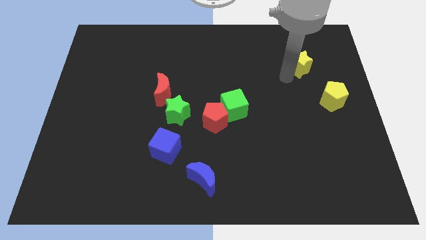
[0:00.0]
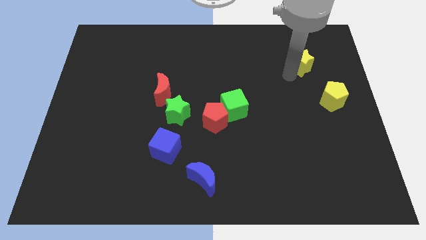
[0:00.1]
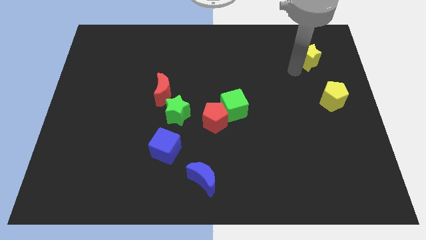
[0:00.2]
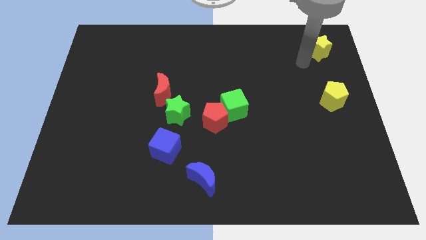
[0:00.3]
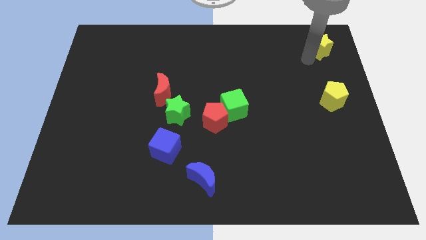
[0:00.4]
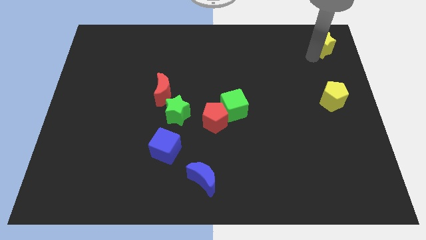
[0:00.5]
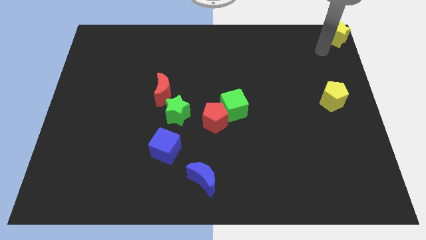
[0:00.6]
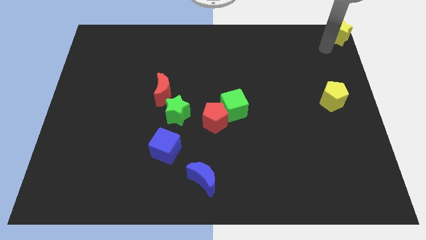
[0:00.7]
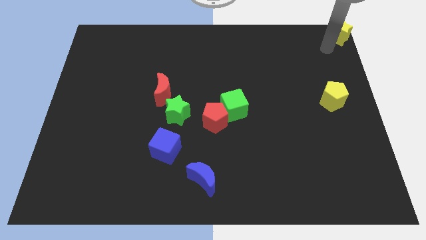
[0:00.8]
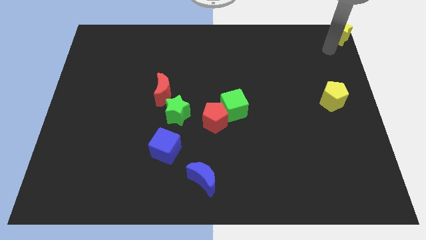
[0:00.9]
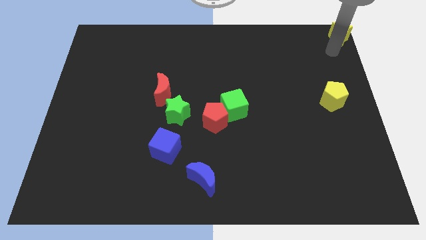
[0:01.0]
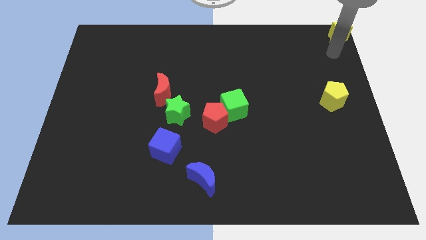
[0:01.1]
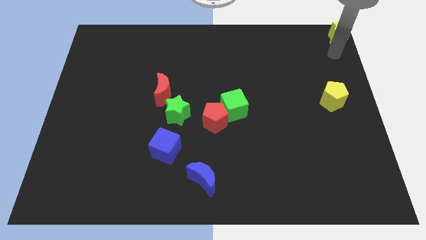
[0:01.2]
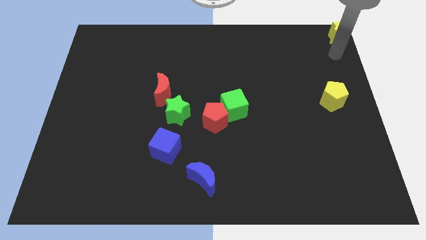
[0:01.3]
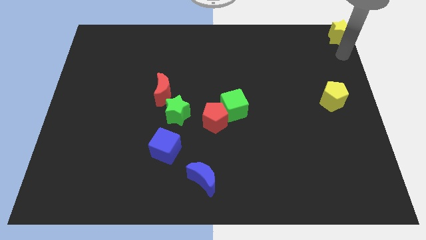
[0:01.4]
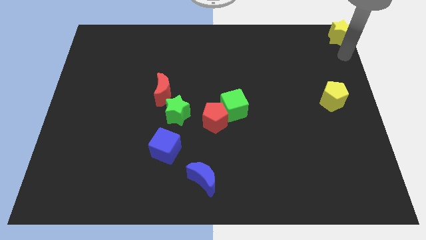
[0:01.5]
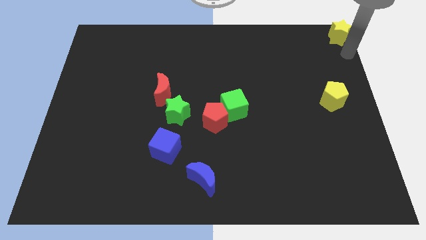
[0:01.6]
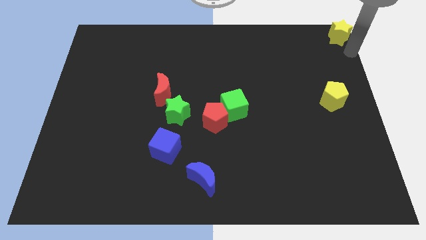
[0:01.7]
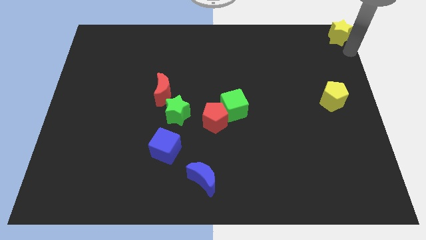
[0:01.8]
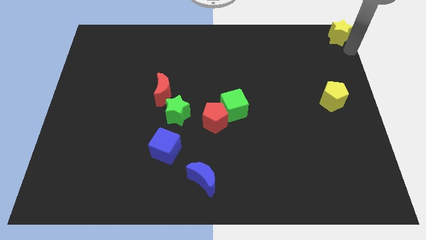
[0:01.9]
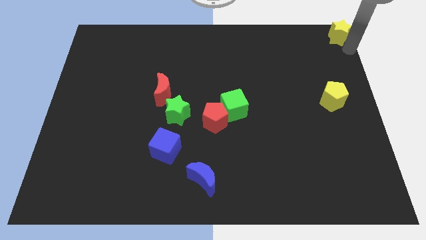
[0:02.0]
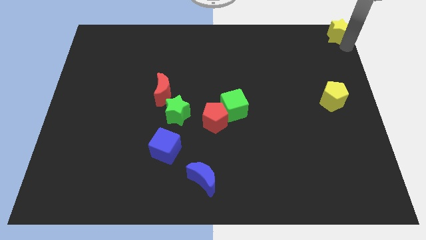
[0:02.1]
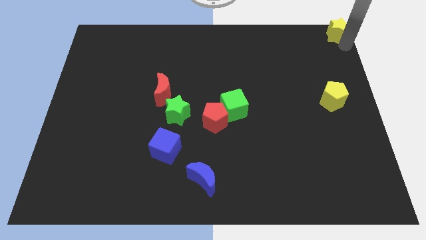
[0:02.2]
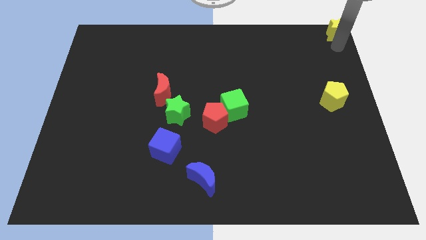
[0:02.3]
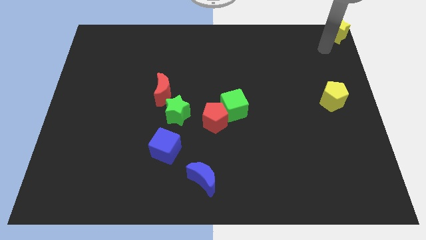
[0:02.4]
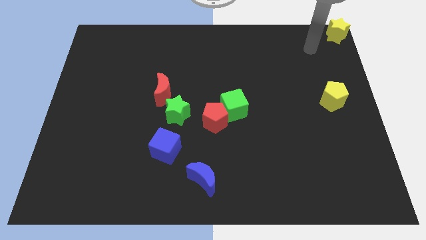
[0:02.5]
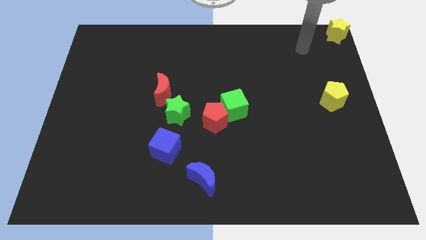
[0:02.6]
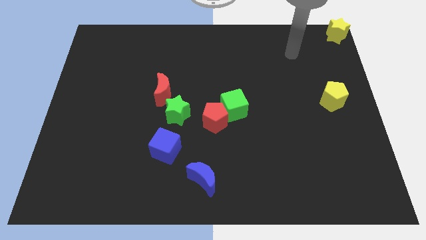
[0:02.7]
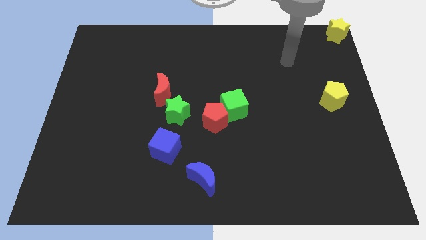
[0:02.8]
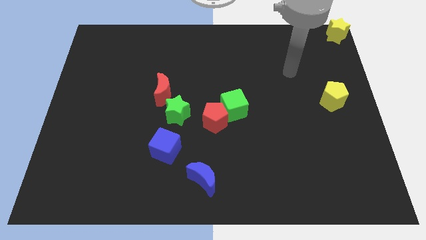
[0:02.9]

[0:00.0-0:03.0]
push the yellow star at the top right corner of the board

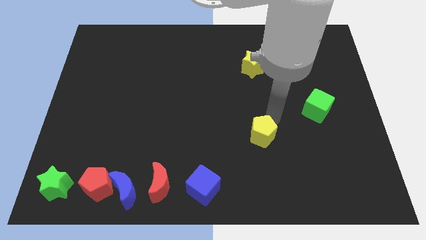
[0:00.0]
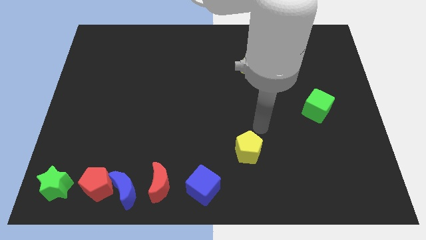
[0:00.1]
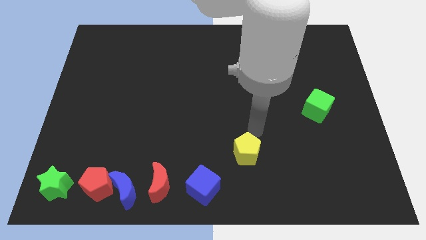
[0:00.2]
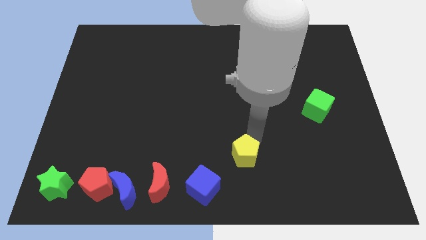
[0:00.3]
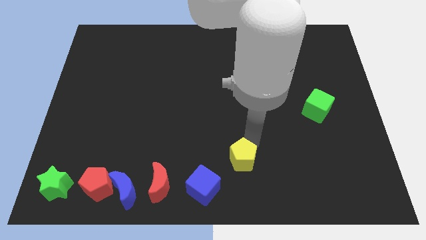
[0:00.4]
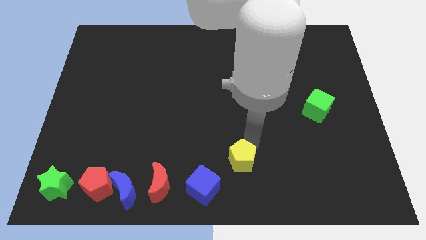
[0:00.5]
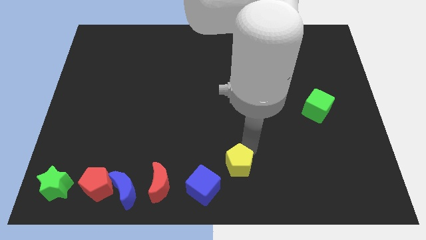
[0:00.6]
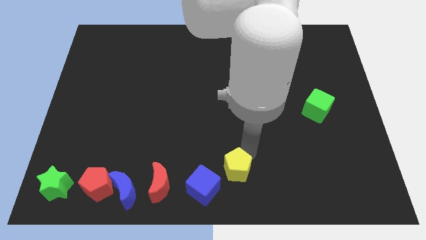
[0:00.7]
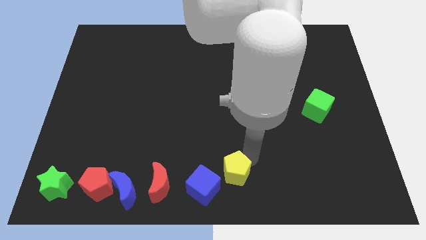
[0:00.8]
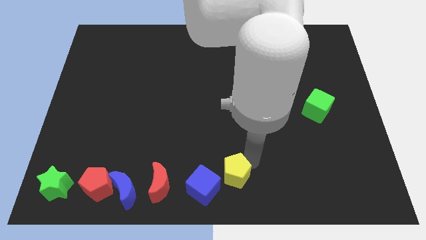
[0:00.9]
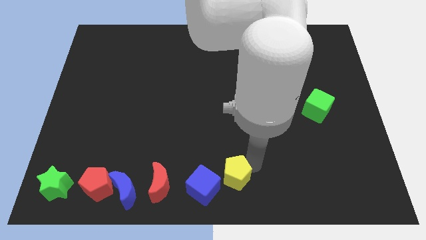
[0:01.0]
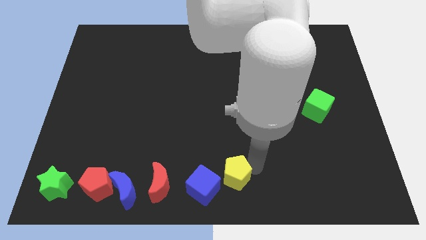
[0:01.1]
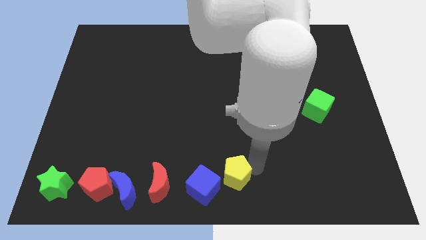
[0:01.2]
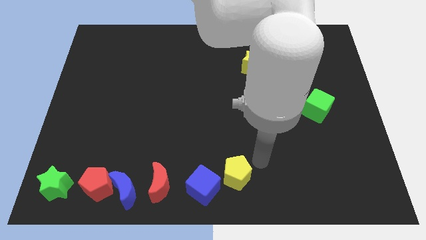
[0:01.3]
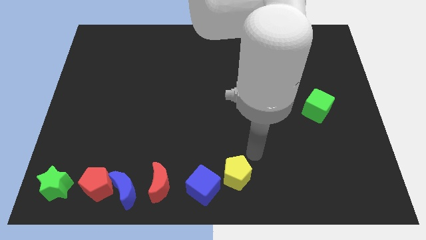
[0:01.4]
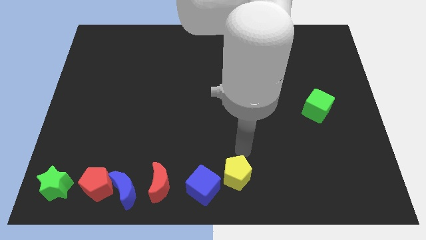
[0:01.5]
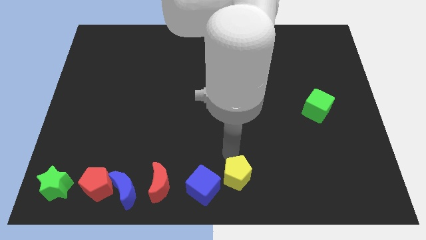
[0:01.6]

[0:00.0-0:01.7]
push the yellow pentagon towards the blue cube

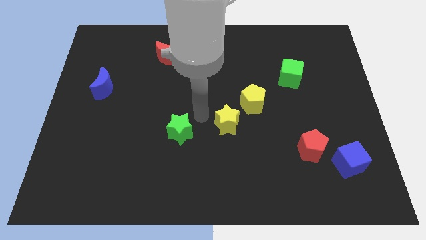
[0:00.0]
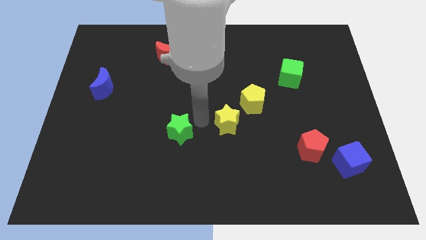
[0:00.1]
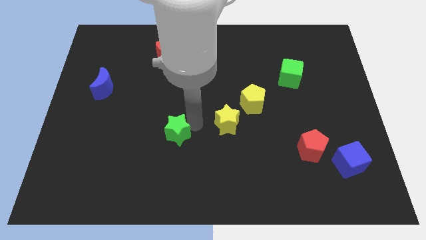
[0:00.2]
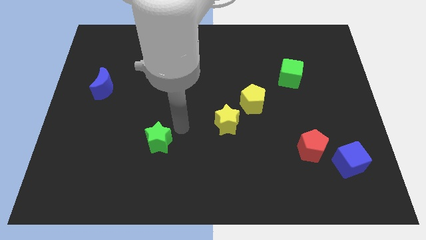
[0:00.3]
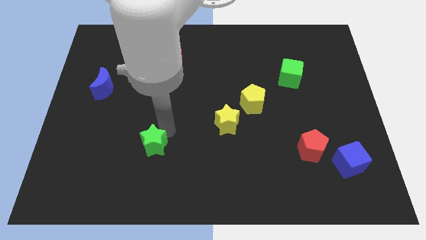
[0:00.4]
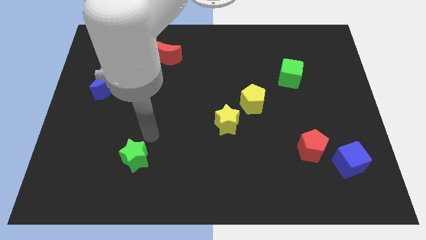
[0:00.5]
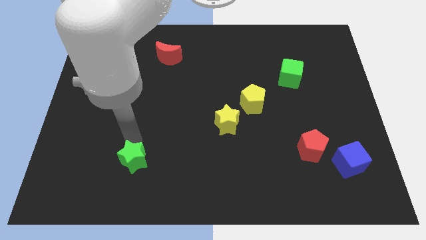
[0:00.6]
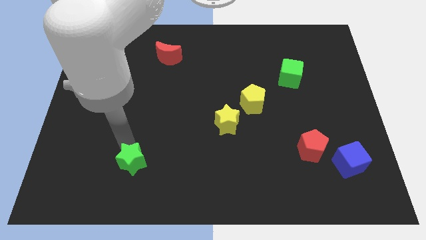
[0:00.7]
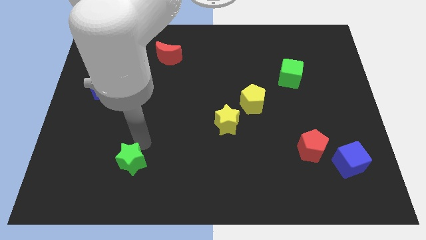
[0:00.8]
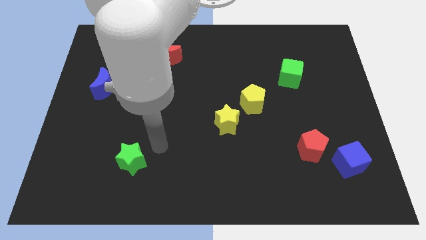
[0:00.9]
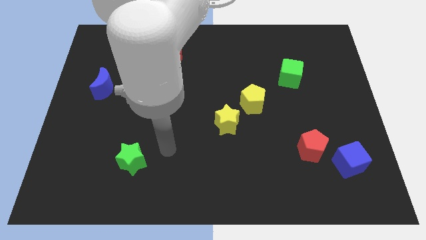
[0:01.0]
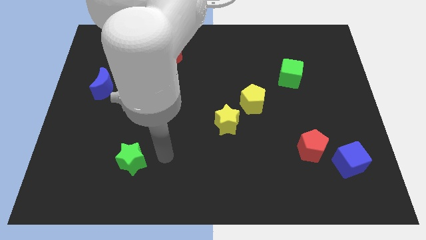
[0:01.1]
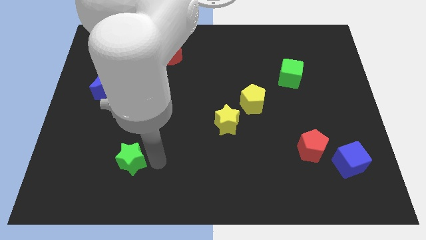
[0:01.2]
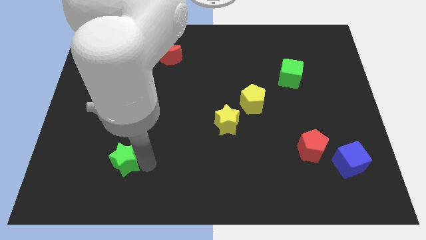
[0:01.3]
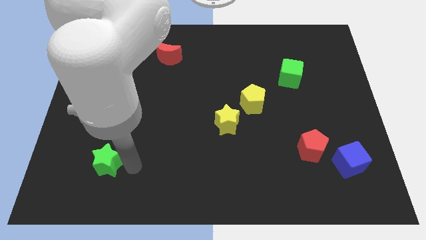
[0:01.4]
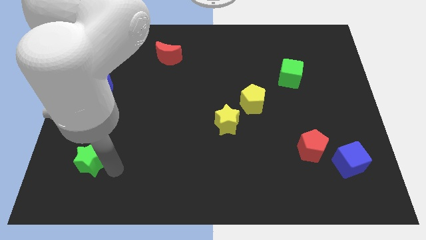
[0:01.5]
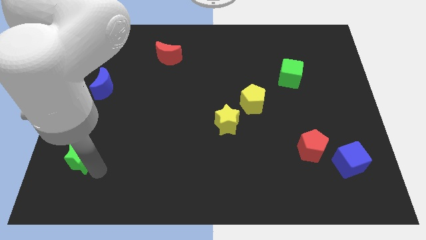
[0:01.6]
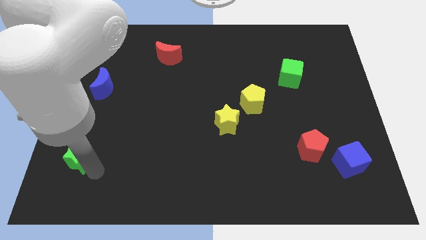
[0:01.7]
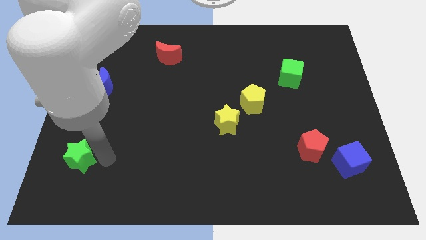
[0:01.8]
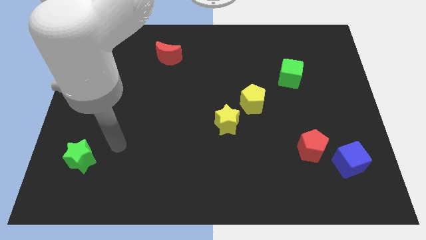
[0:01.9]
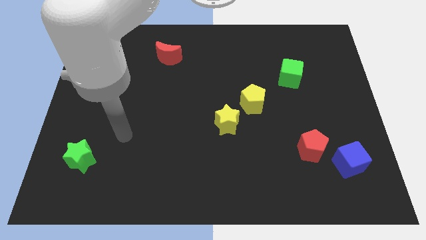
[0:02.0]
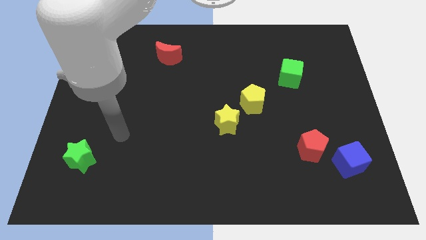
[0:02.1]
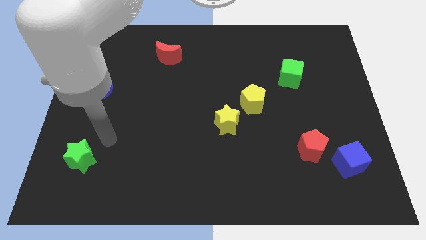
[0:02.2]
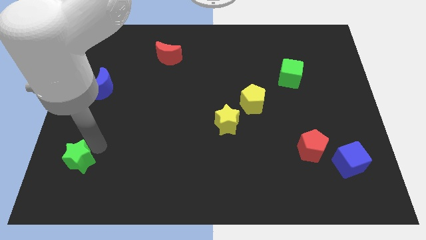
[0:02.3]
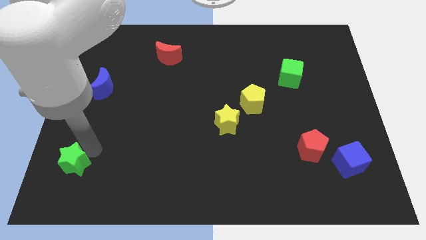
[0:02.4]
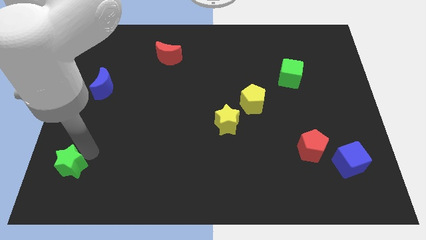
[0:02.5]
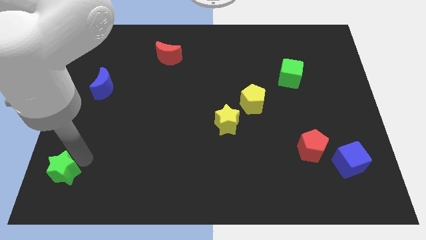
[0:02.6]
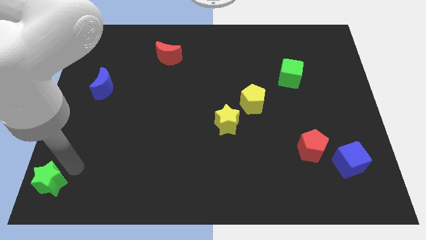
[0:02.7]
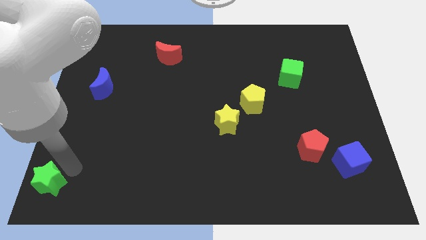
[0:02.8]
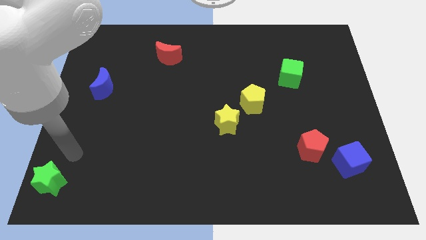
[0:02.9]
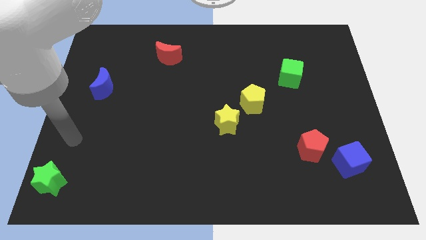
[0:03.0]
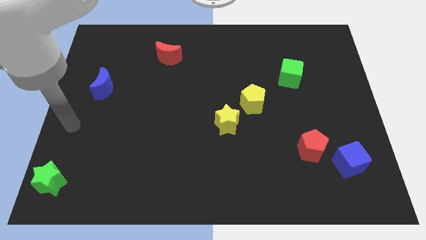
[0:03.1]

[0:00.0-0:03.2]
push the green star to the bottom left corner

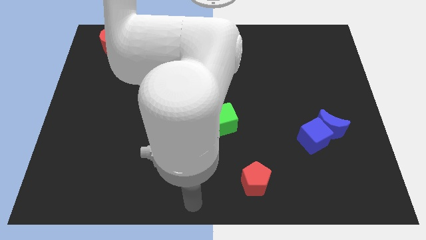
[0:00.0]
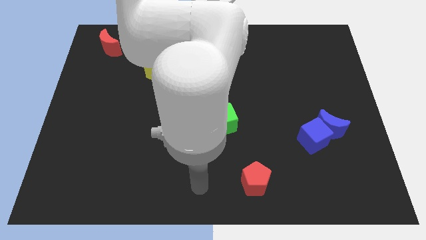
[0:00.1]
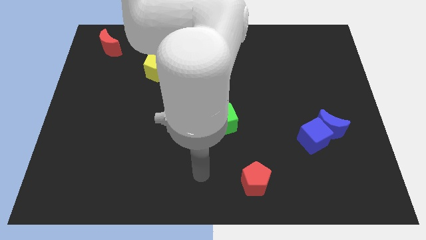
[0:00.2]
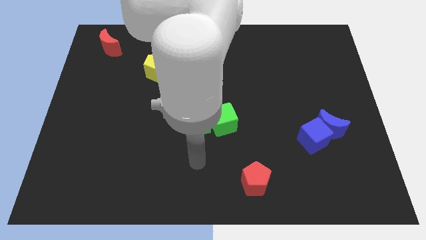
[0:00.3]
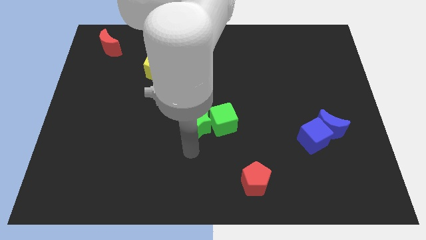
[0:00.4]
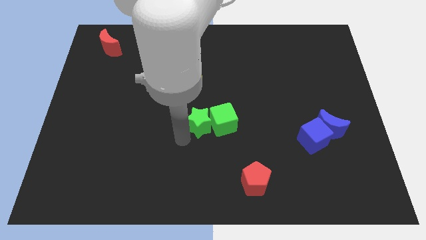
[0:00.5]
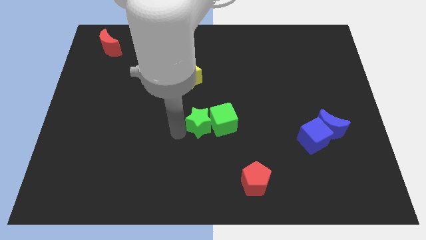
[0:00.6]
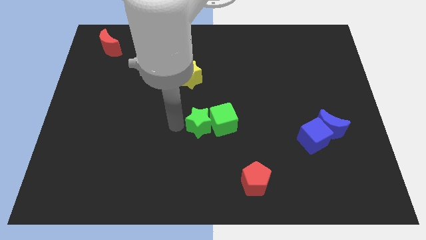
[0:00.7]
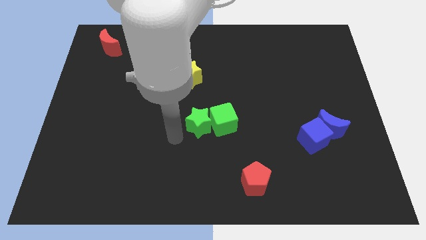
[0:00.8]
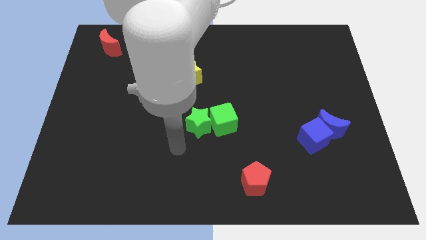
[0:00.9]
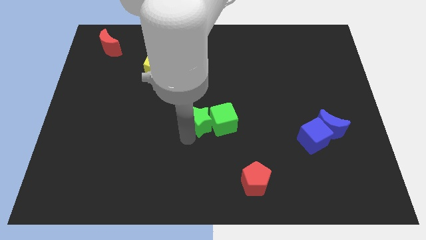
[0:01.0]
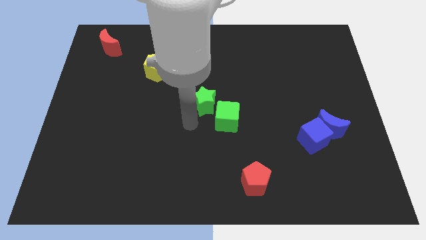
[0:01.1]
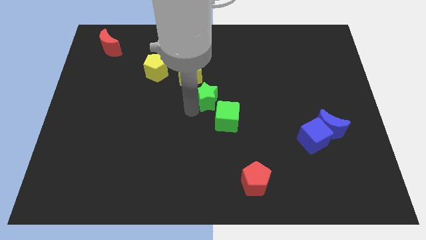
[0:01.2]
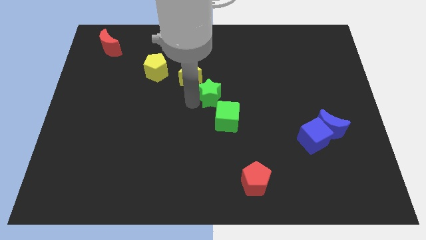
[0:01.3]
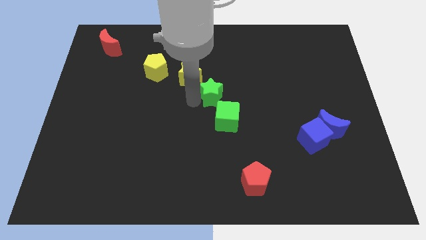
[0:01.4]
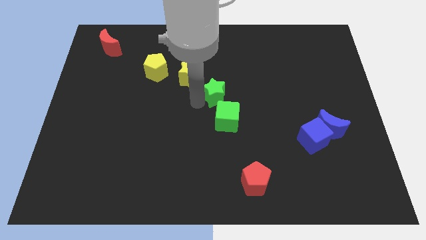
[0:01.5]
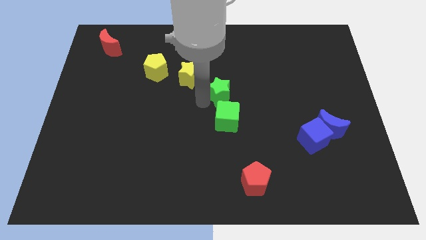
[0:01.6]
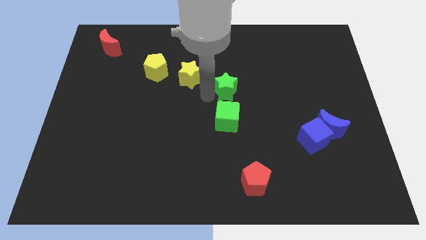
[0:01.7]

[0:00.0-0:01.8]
place green star to the top of green cube
